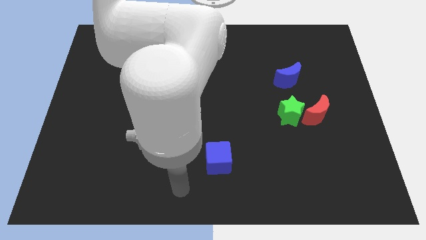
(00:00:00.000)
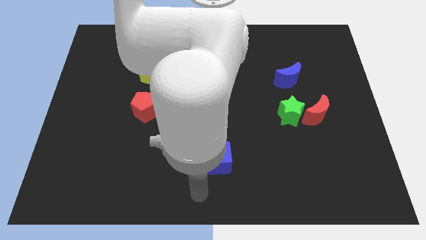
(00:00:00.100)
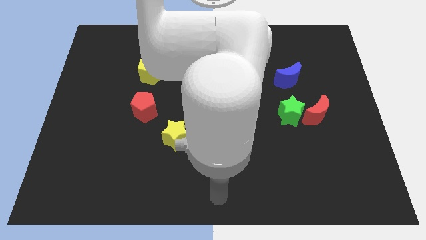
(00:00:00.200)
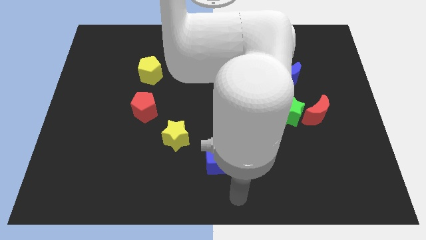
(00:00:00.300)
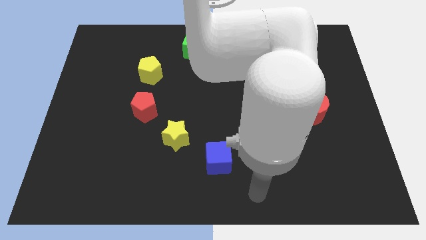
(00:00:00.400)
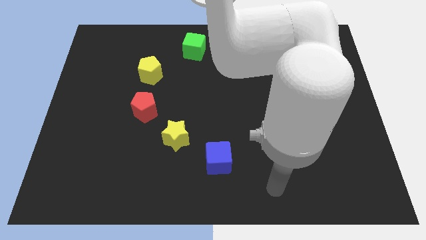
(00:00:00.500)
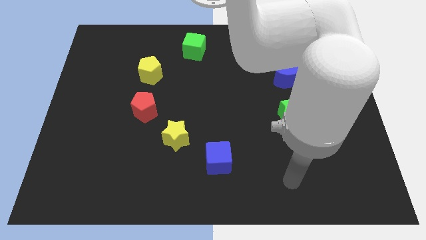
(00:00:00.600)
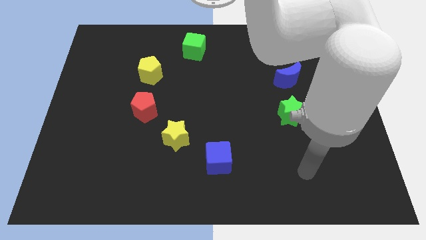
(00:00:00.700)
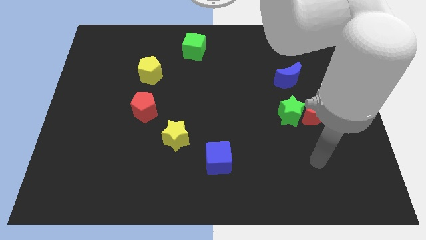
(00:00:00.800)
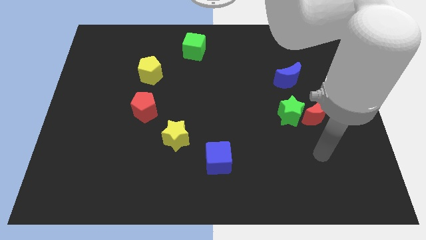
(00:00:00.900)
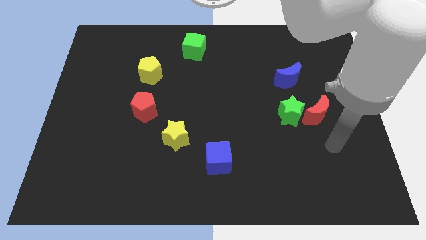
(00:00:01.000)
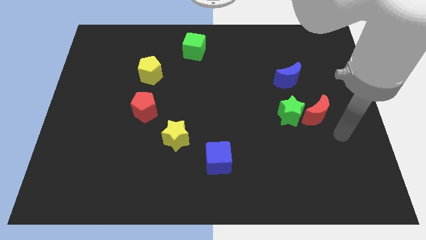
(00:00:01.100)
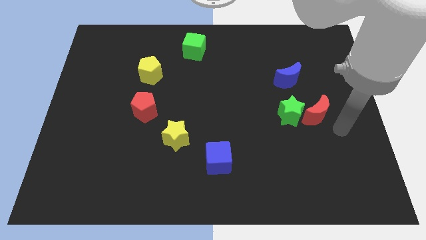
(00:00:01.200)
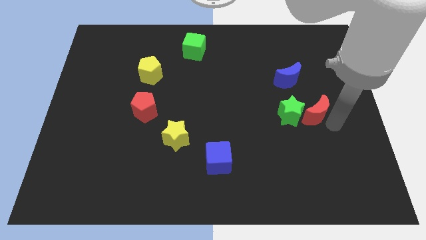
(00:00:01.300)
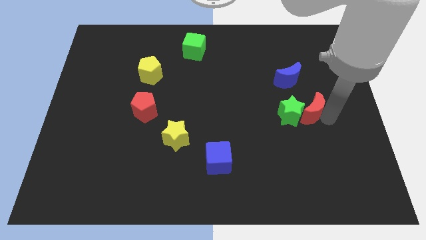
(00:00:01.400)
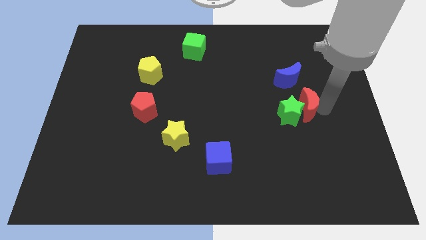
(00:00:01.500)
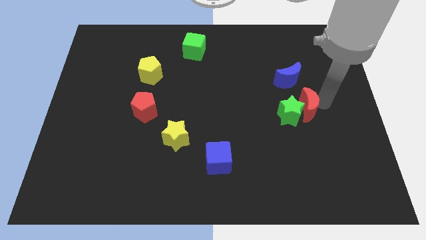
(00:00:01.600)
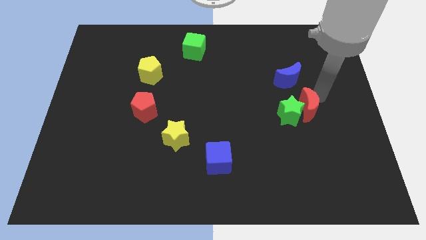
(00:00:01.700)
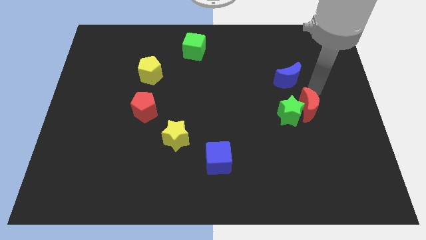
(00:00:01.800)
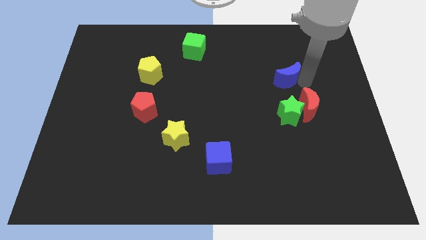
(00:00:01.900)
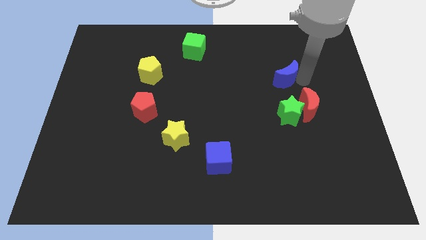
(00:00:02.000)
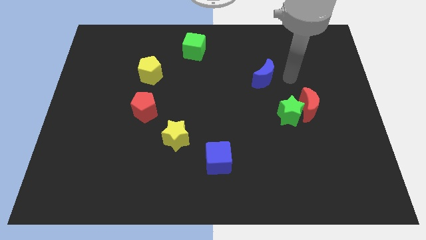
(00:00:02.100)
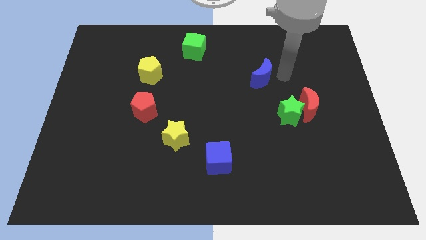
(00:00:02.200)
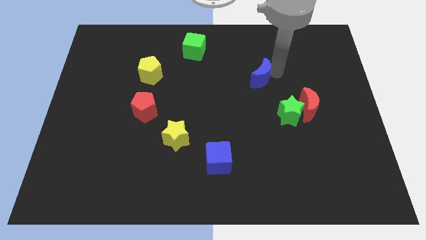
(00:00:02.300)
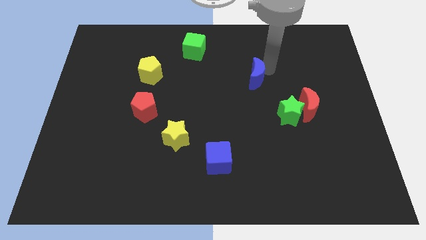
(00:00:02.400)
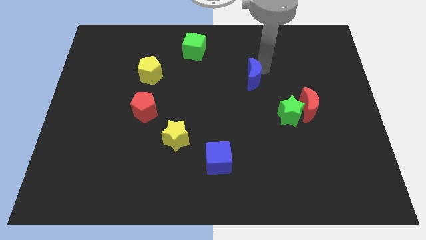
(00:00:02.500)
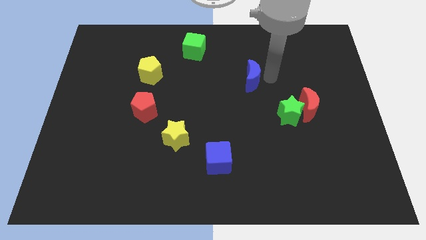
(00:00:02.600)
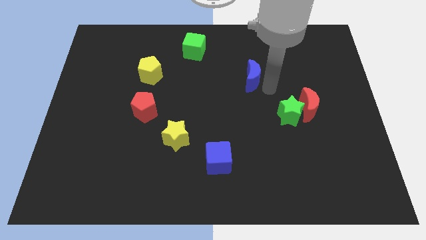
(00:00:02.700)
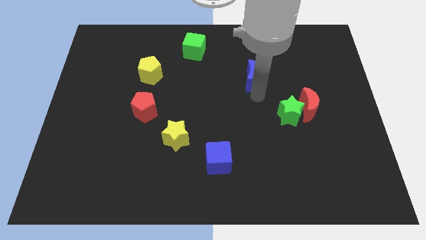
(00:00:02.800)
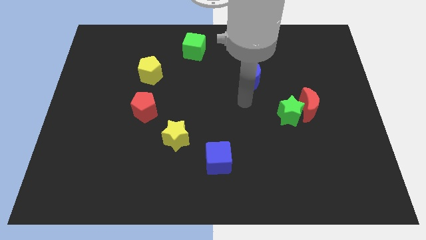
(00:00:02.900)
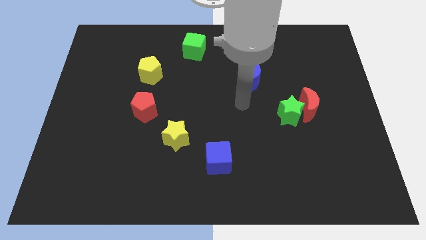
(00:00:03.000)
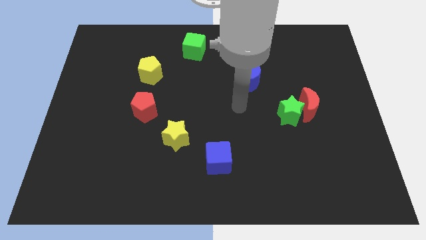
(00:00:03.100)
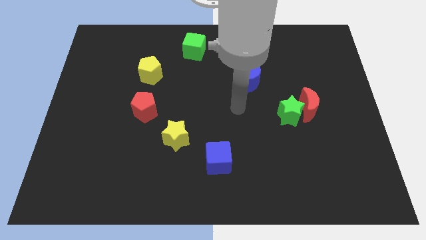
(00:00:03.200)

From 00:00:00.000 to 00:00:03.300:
move the blue moon diagonally to the bottom right of the green cube

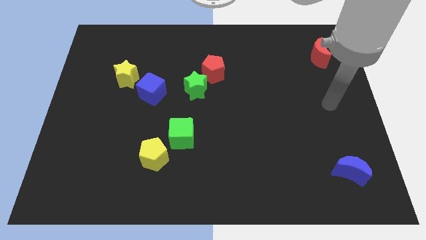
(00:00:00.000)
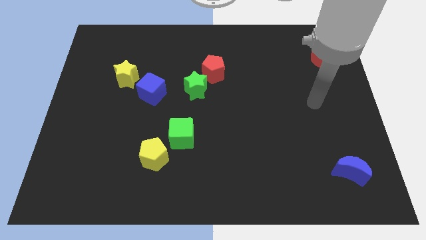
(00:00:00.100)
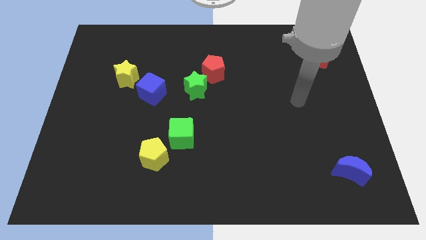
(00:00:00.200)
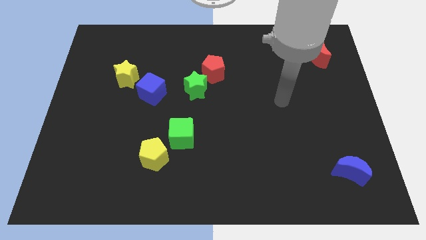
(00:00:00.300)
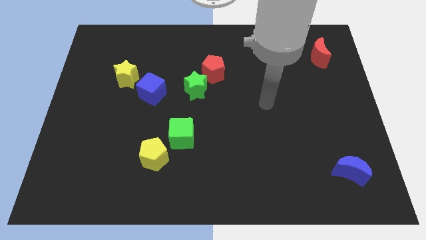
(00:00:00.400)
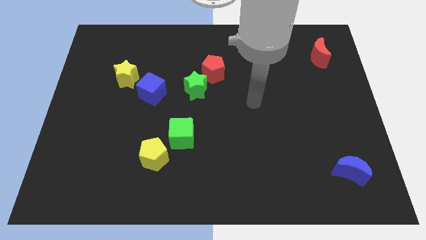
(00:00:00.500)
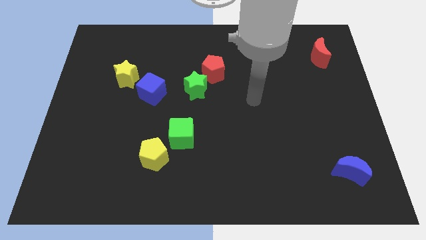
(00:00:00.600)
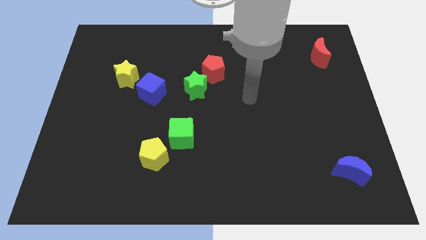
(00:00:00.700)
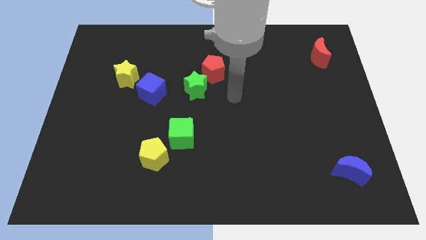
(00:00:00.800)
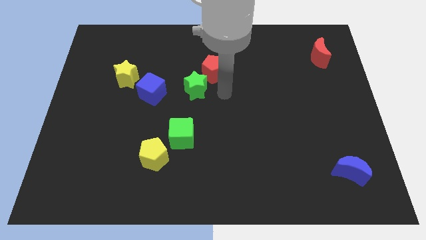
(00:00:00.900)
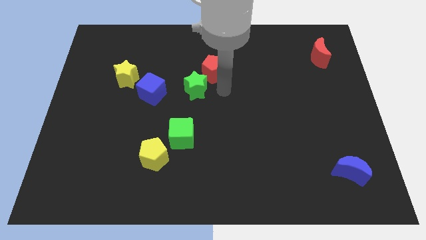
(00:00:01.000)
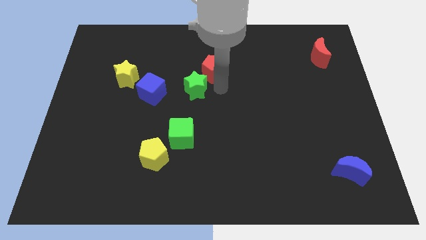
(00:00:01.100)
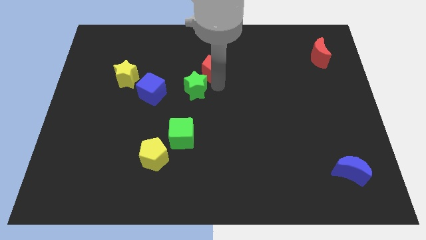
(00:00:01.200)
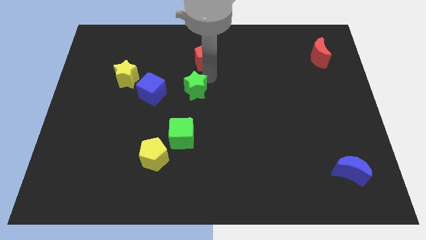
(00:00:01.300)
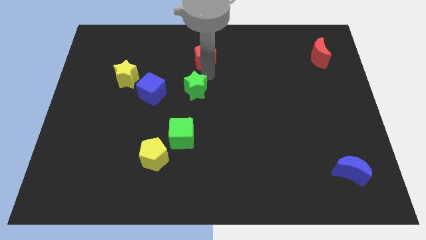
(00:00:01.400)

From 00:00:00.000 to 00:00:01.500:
move the red pentagon slightly upwards

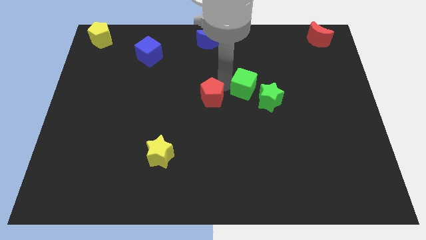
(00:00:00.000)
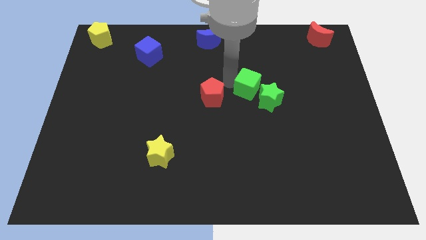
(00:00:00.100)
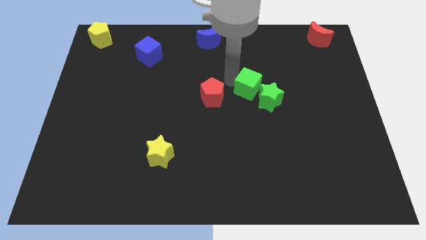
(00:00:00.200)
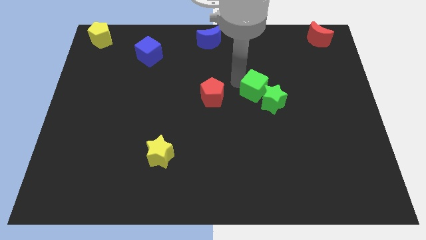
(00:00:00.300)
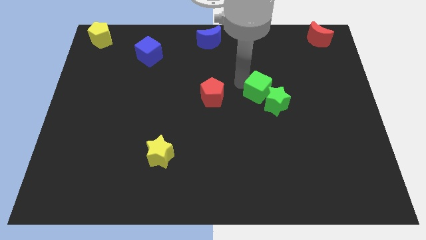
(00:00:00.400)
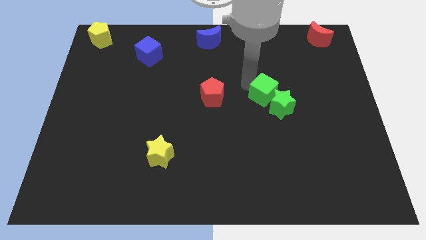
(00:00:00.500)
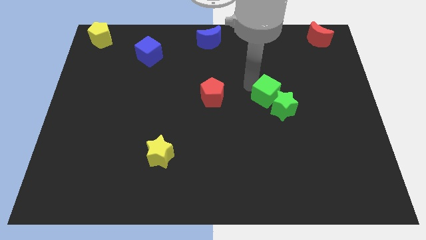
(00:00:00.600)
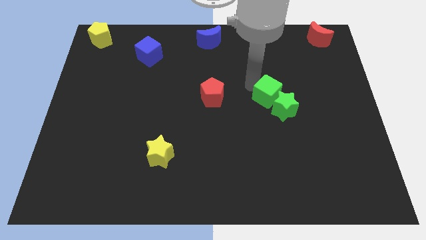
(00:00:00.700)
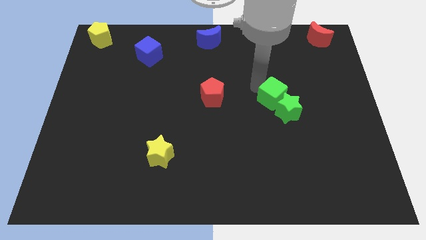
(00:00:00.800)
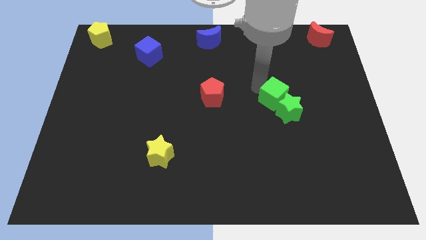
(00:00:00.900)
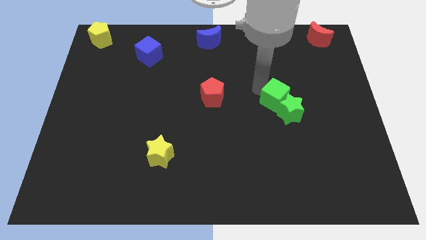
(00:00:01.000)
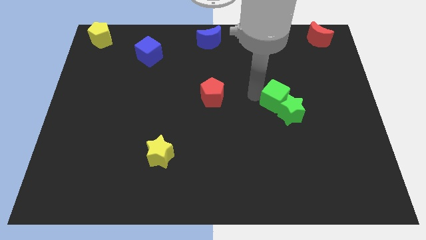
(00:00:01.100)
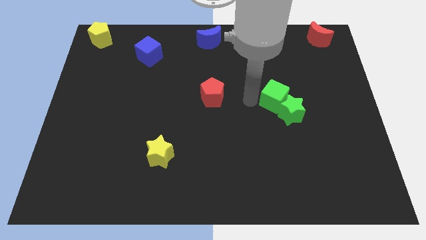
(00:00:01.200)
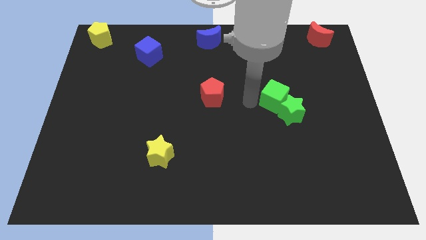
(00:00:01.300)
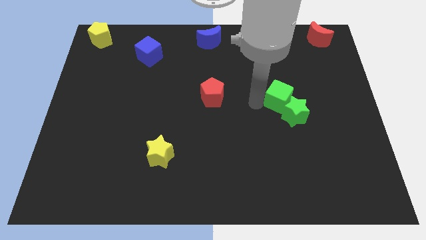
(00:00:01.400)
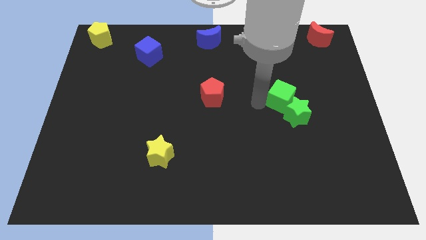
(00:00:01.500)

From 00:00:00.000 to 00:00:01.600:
push the green blocks towards the bottom right side of the board

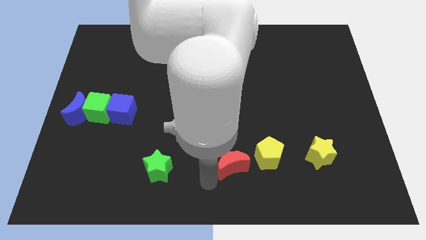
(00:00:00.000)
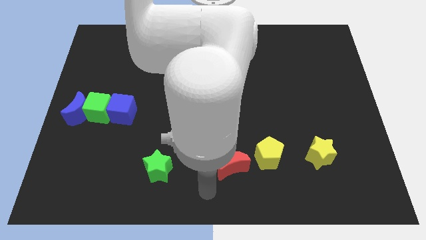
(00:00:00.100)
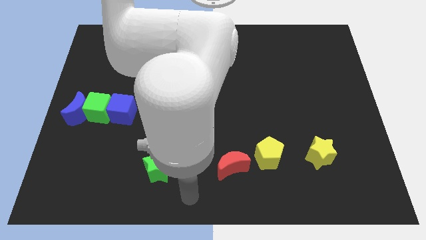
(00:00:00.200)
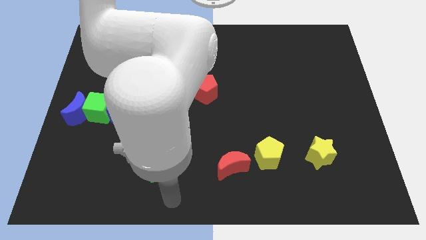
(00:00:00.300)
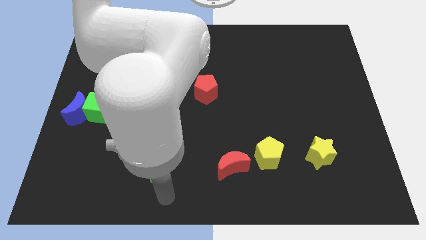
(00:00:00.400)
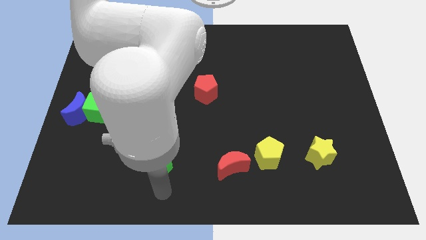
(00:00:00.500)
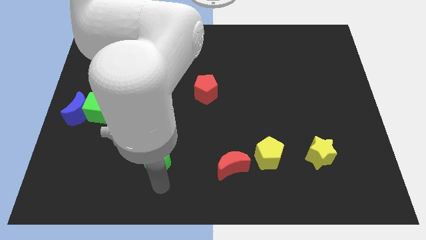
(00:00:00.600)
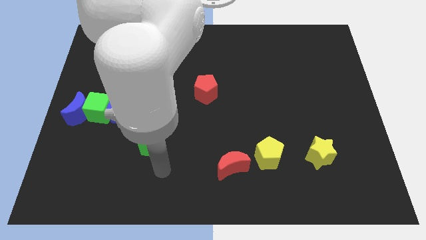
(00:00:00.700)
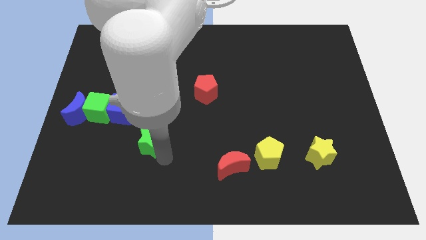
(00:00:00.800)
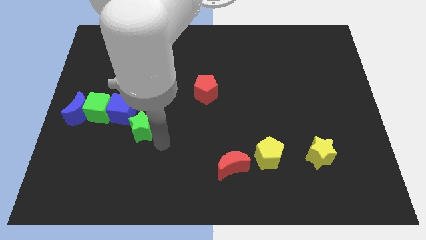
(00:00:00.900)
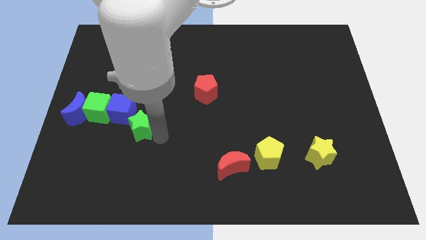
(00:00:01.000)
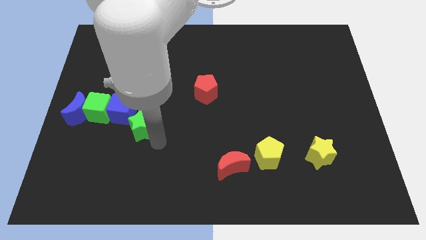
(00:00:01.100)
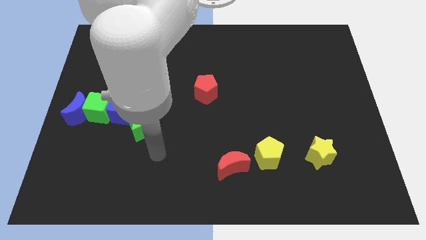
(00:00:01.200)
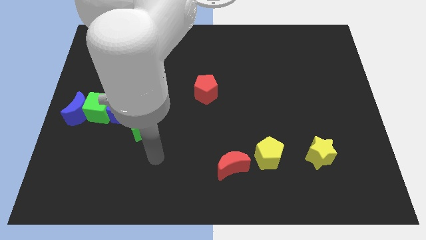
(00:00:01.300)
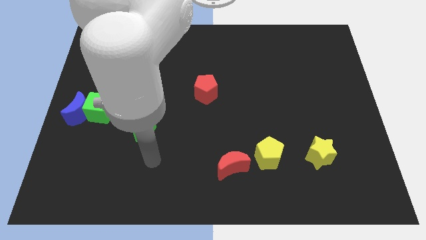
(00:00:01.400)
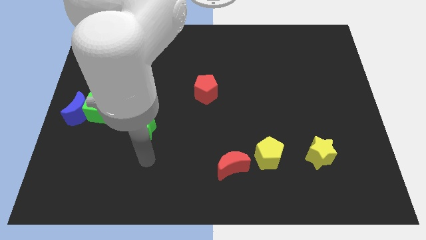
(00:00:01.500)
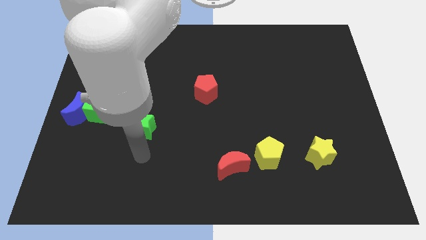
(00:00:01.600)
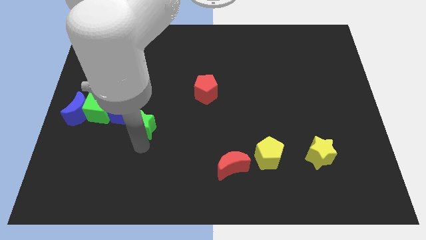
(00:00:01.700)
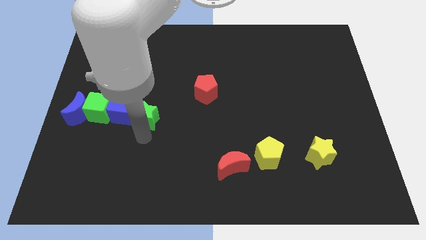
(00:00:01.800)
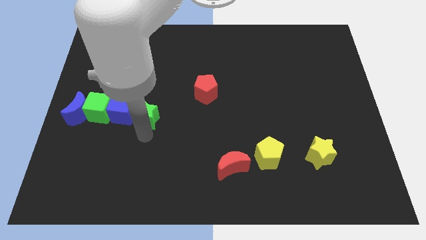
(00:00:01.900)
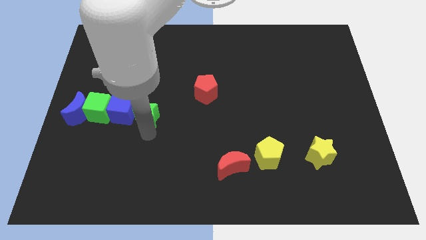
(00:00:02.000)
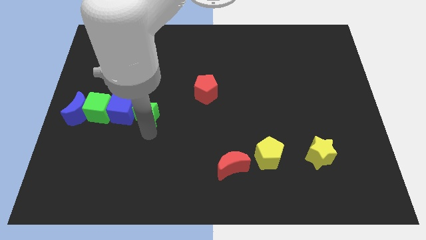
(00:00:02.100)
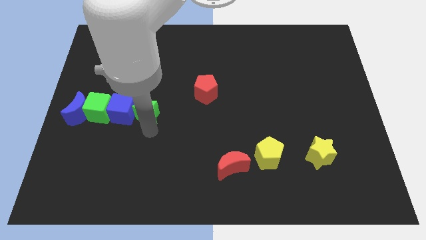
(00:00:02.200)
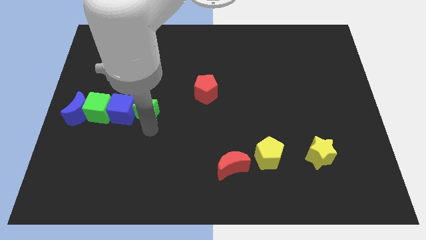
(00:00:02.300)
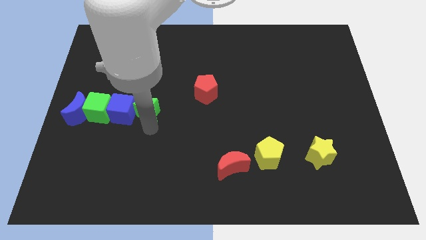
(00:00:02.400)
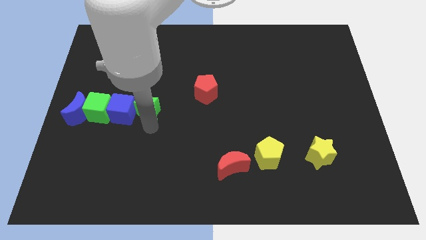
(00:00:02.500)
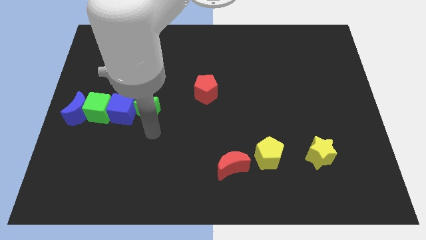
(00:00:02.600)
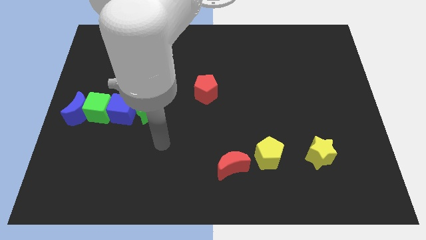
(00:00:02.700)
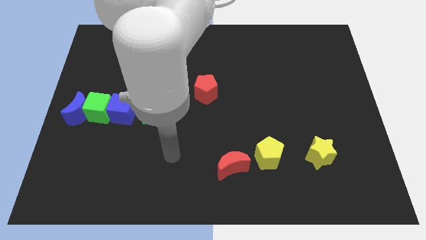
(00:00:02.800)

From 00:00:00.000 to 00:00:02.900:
move the green star to the right side of the blue cube
